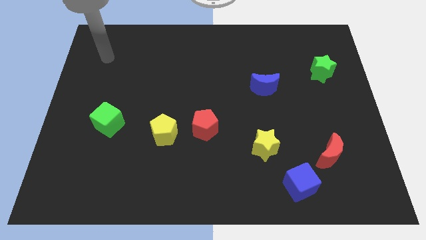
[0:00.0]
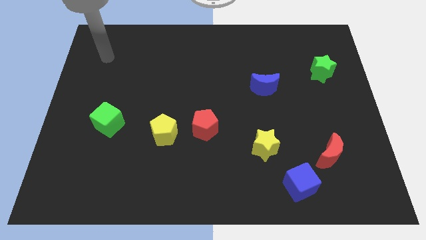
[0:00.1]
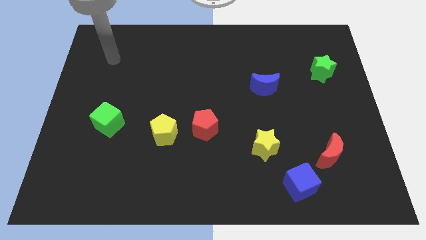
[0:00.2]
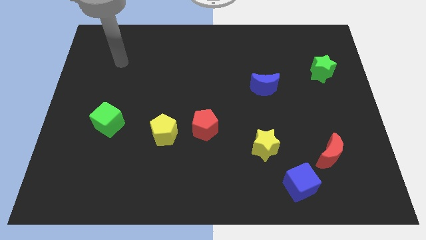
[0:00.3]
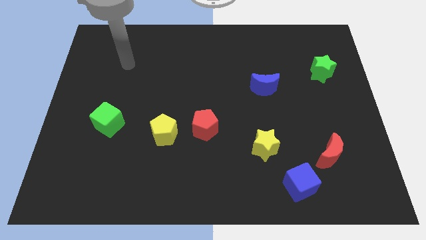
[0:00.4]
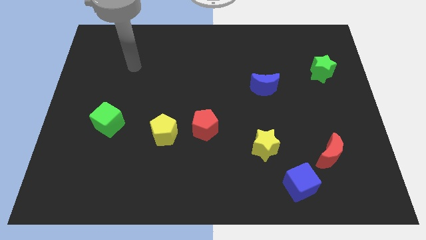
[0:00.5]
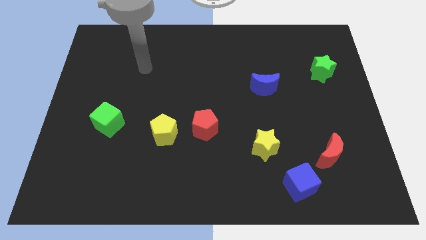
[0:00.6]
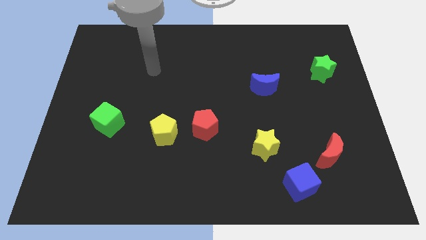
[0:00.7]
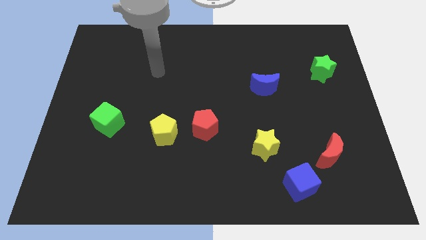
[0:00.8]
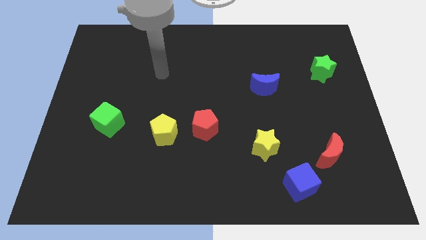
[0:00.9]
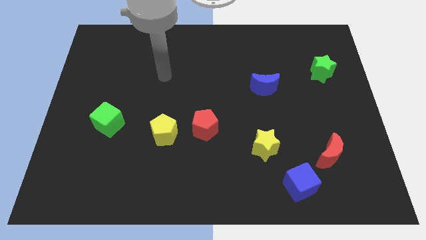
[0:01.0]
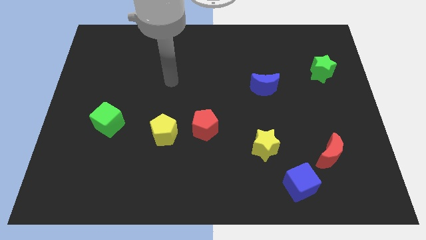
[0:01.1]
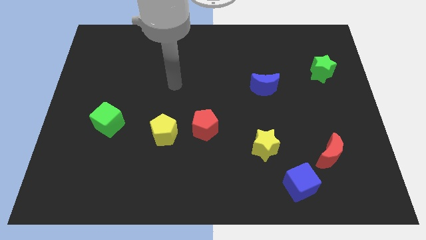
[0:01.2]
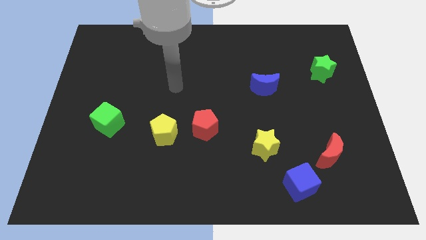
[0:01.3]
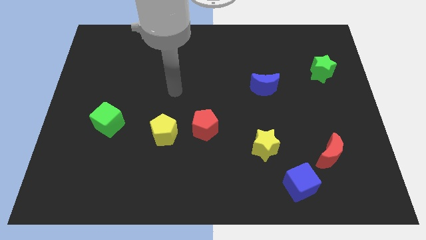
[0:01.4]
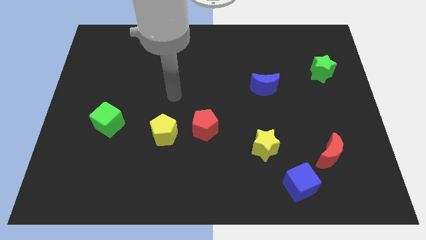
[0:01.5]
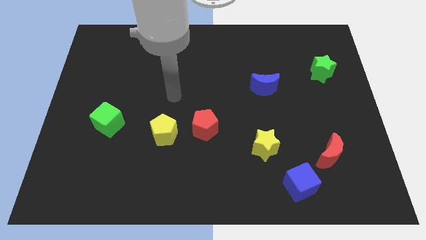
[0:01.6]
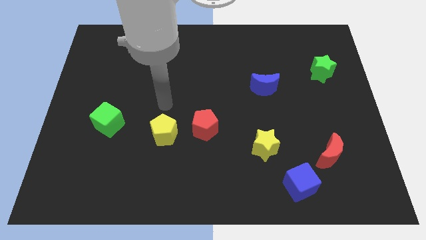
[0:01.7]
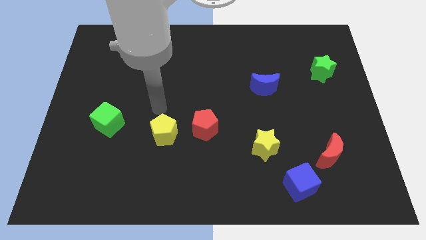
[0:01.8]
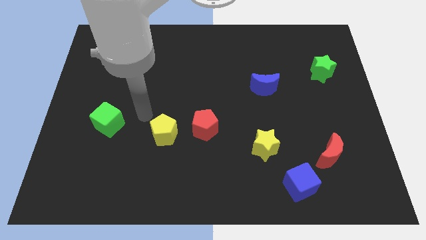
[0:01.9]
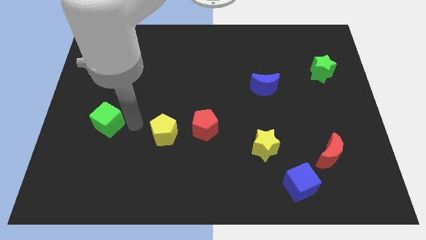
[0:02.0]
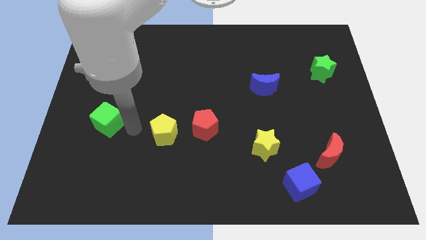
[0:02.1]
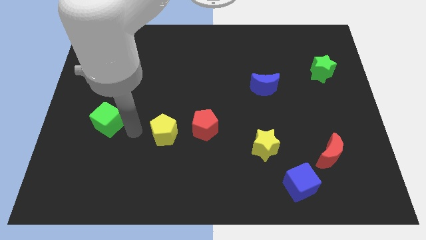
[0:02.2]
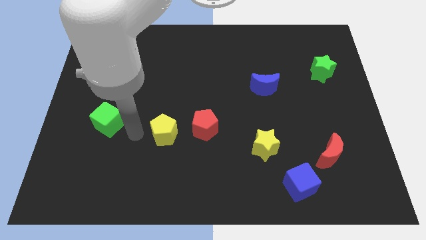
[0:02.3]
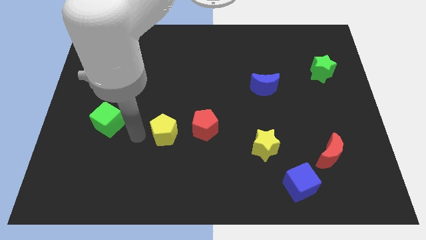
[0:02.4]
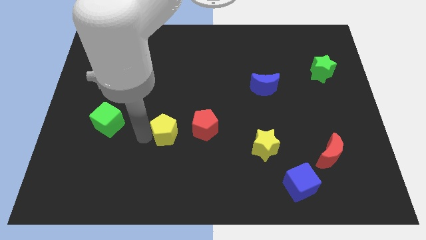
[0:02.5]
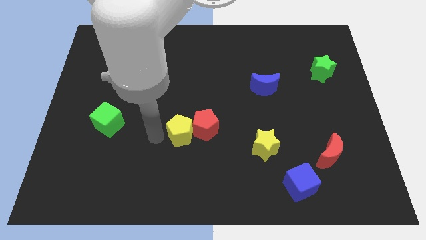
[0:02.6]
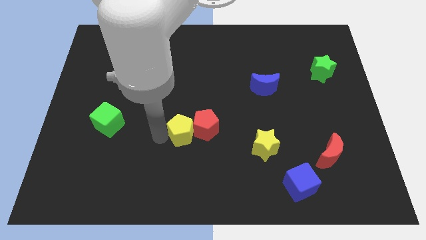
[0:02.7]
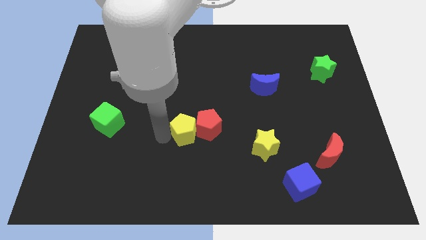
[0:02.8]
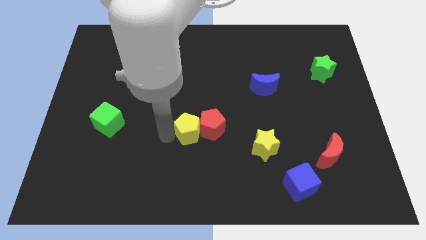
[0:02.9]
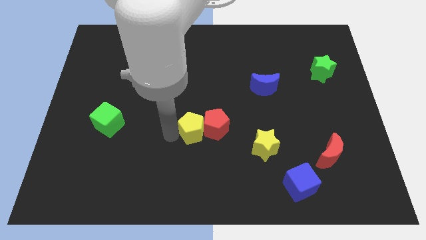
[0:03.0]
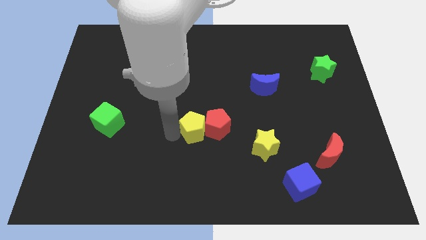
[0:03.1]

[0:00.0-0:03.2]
push the yellow pentagon into the red pentagon

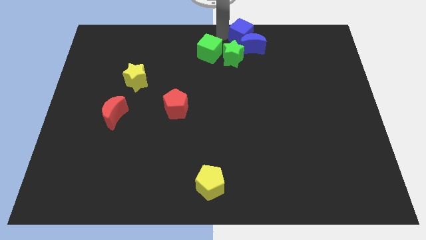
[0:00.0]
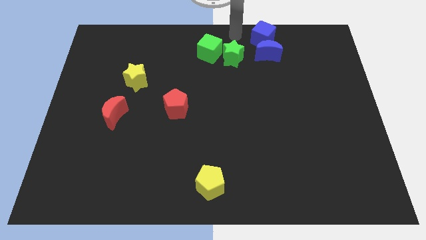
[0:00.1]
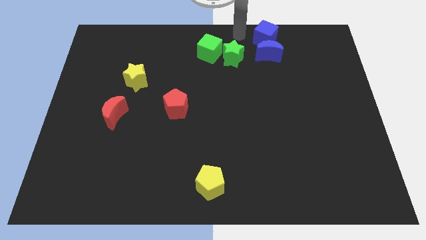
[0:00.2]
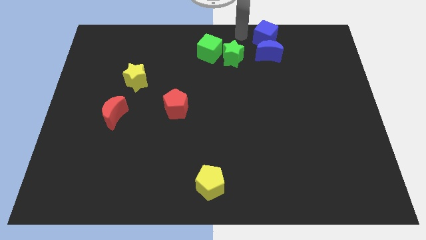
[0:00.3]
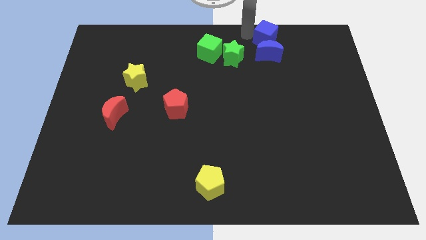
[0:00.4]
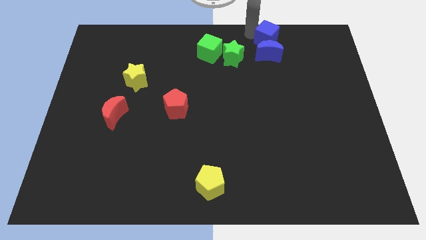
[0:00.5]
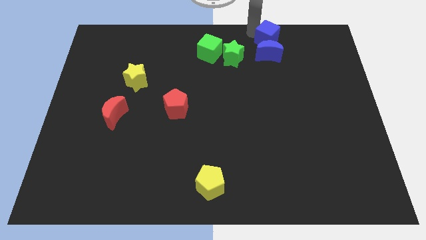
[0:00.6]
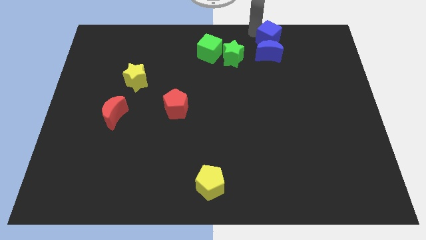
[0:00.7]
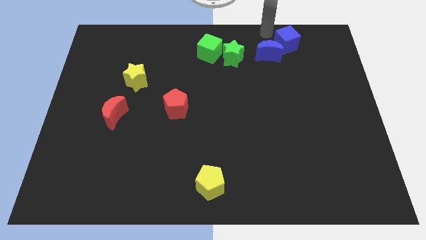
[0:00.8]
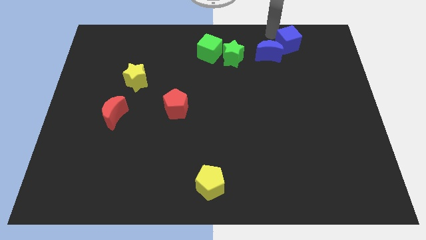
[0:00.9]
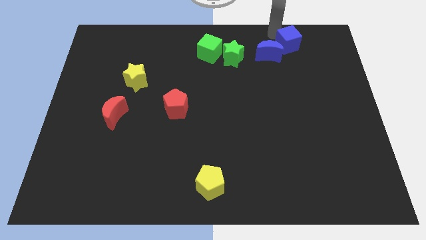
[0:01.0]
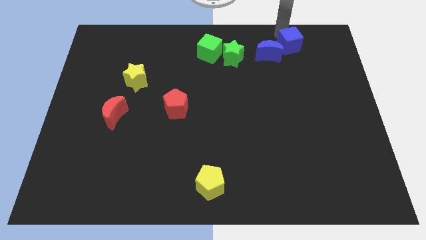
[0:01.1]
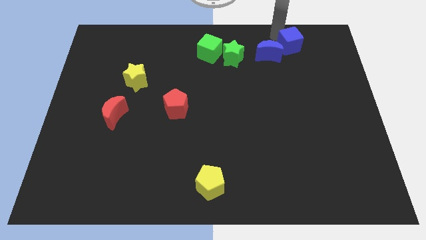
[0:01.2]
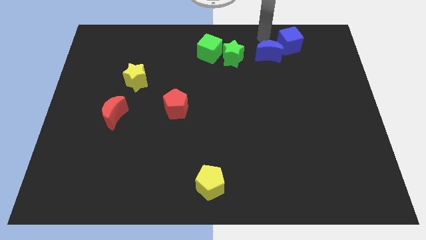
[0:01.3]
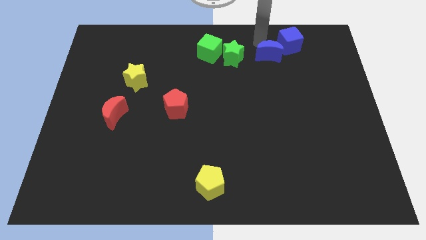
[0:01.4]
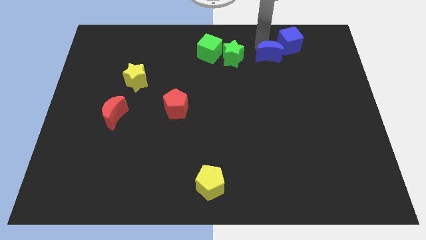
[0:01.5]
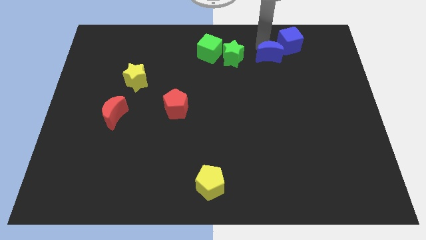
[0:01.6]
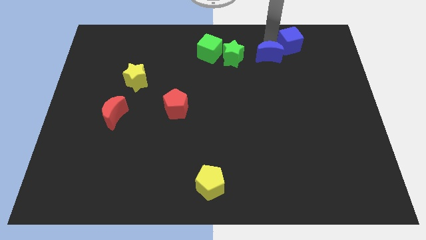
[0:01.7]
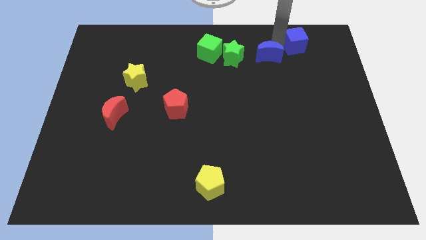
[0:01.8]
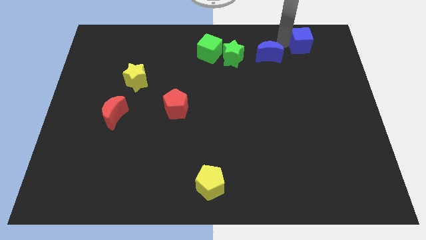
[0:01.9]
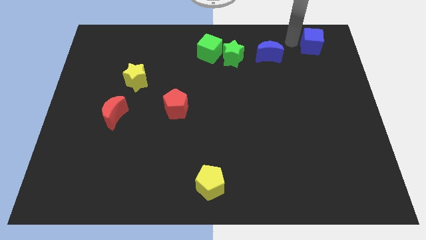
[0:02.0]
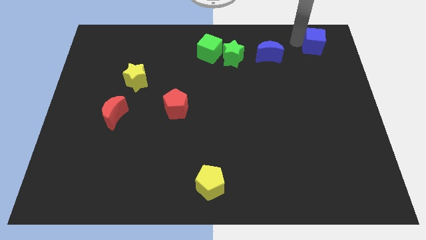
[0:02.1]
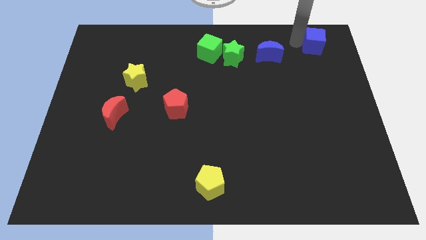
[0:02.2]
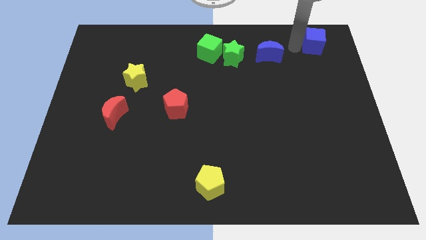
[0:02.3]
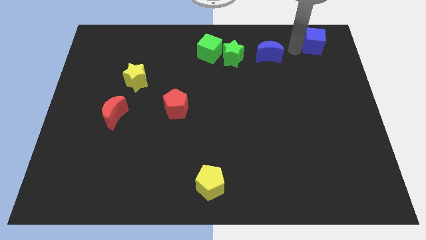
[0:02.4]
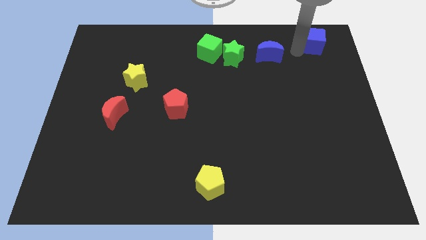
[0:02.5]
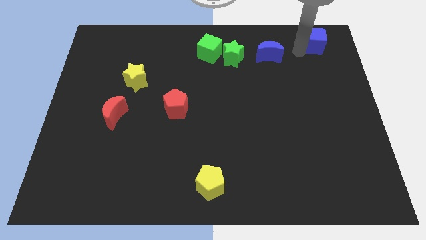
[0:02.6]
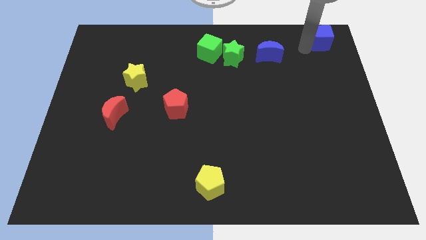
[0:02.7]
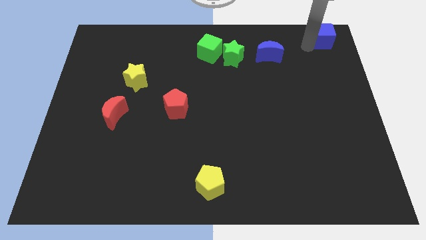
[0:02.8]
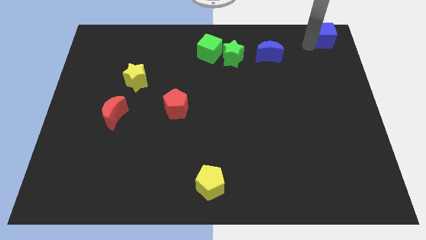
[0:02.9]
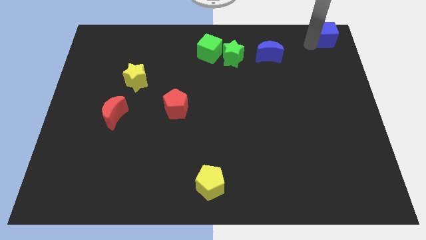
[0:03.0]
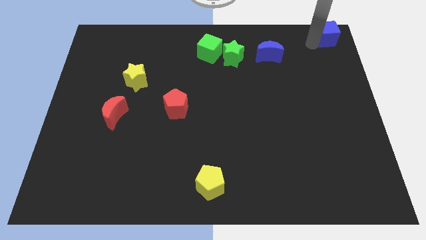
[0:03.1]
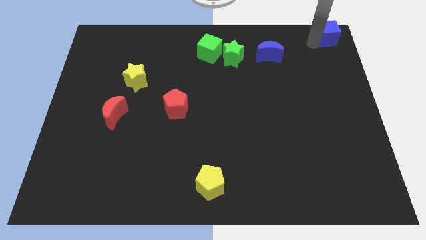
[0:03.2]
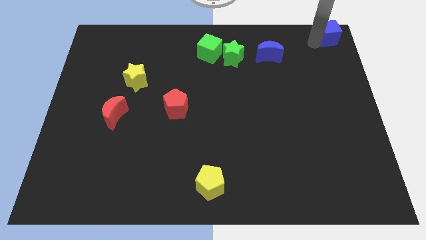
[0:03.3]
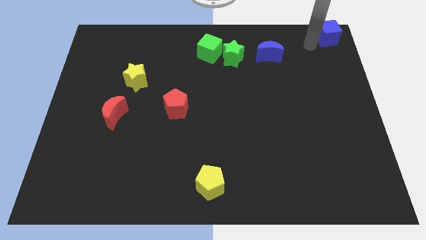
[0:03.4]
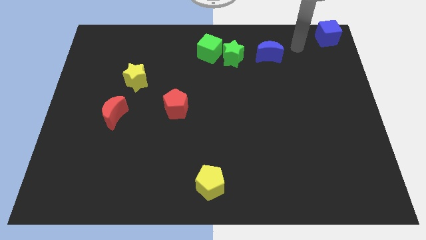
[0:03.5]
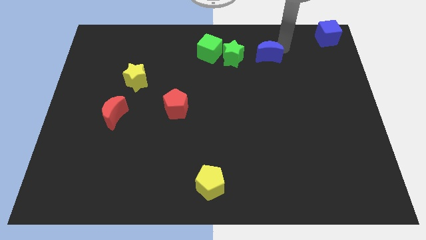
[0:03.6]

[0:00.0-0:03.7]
move the blue cube to the top right corner of the board

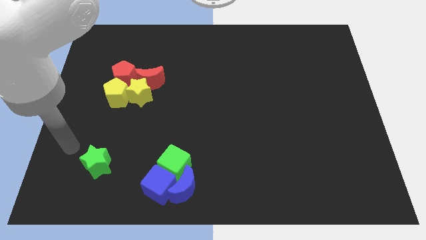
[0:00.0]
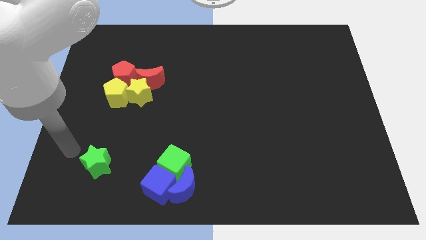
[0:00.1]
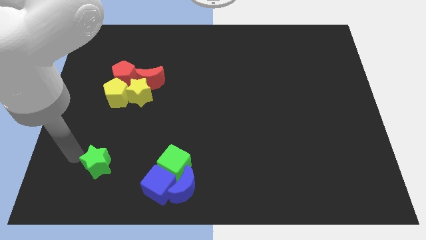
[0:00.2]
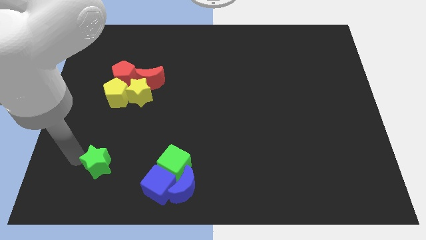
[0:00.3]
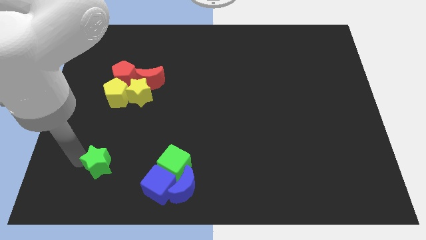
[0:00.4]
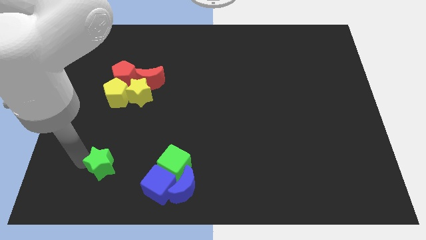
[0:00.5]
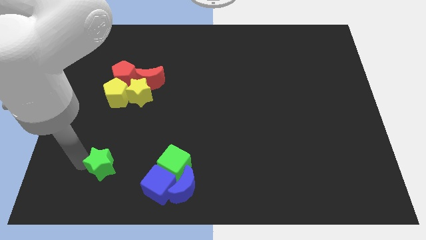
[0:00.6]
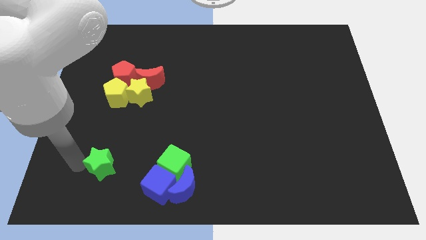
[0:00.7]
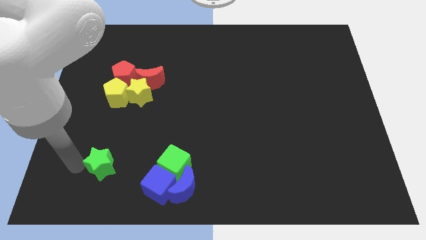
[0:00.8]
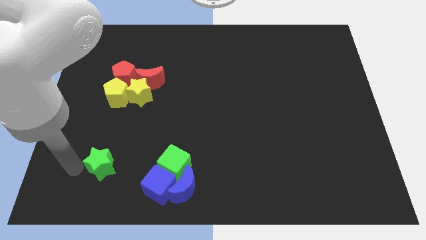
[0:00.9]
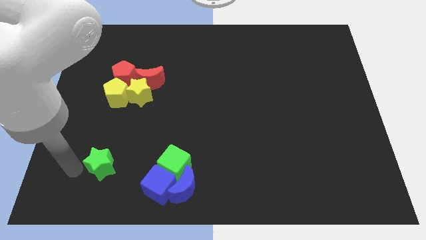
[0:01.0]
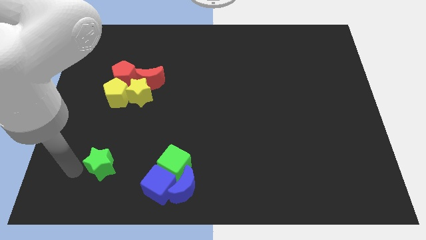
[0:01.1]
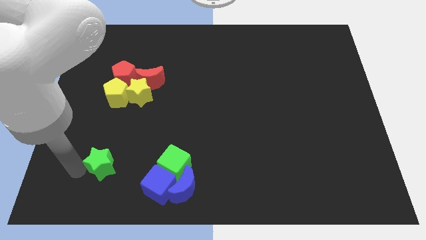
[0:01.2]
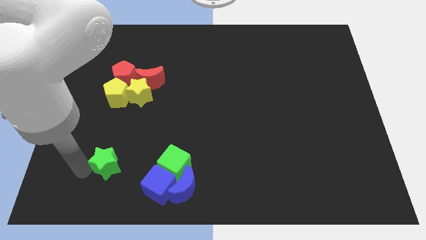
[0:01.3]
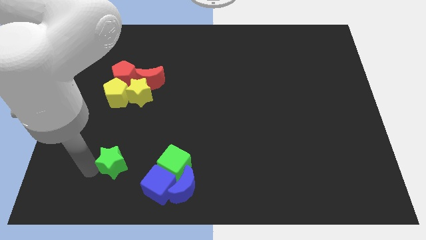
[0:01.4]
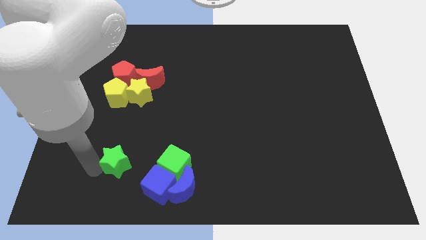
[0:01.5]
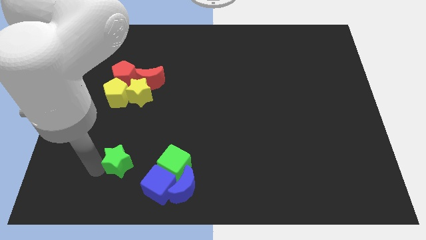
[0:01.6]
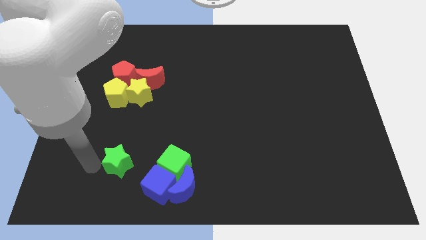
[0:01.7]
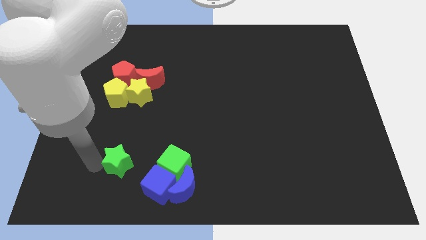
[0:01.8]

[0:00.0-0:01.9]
push the green star parallel to the blue cube
